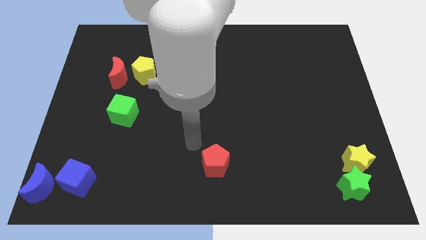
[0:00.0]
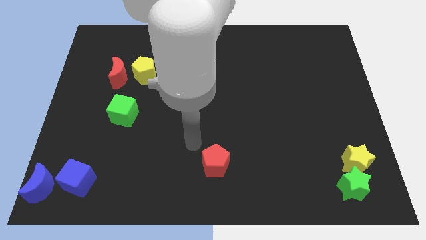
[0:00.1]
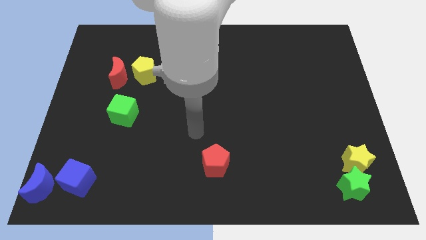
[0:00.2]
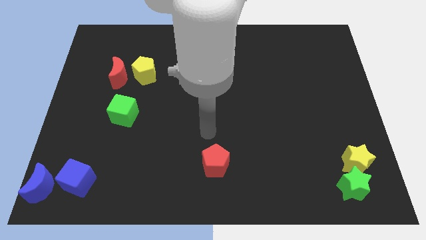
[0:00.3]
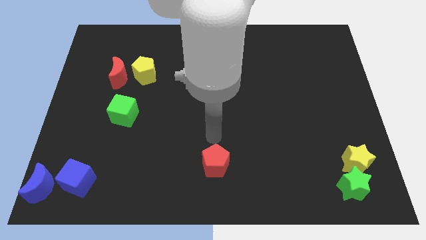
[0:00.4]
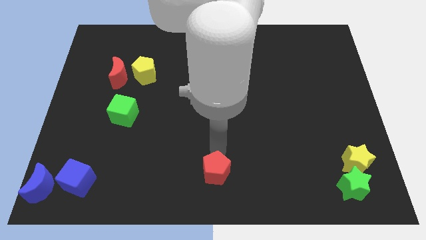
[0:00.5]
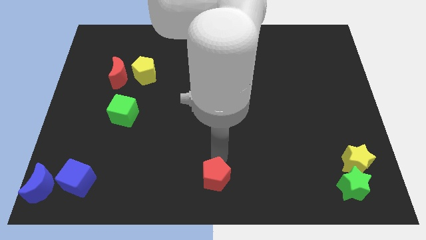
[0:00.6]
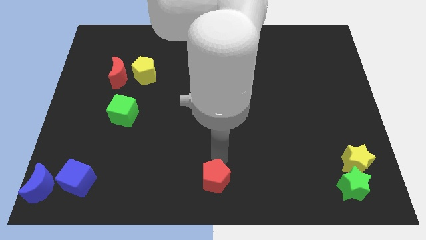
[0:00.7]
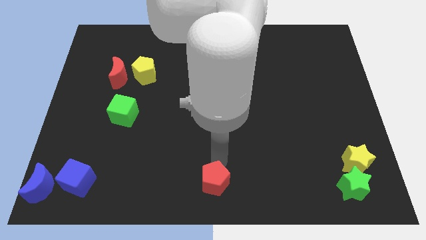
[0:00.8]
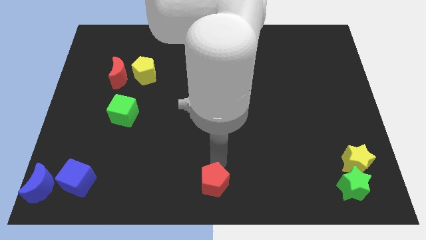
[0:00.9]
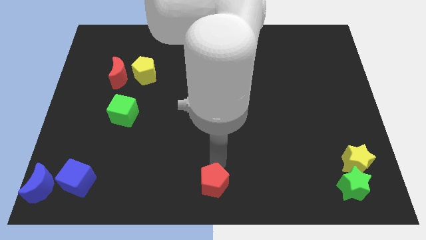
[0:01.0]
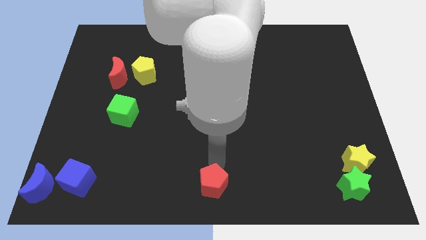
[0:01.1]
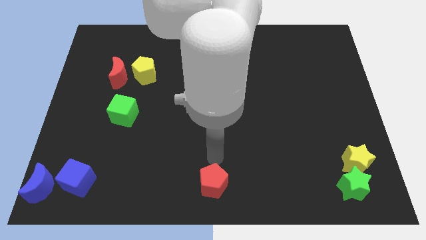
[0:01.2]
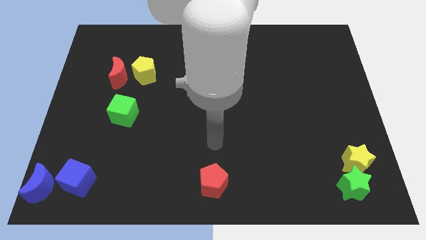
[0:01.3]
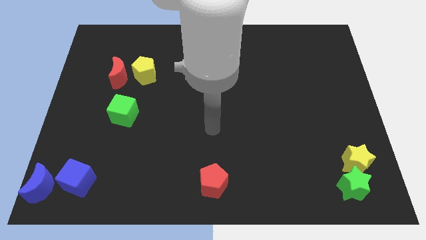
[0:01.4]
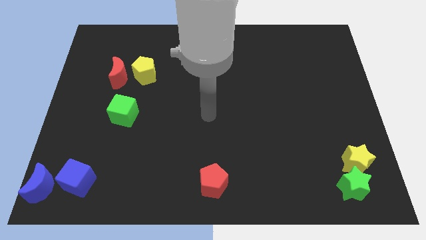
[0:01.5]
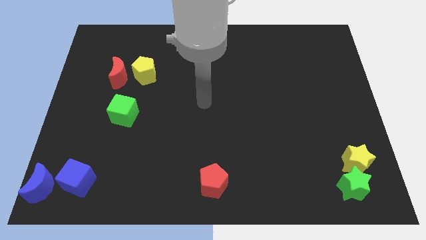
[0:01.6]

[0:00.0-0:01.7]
push the red pentagon to the bottom centre of the board

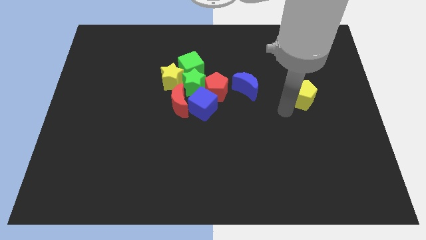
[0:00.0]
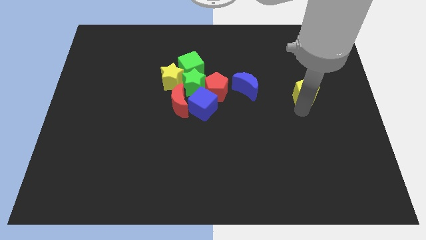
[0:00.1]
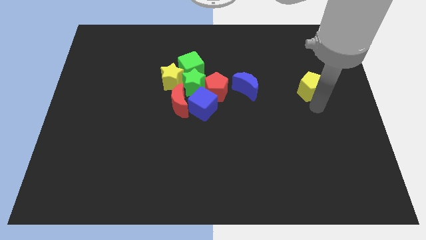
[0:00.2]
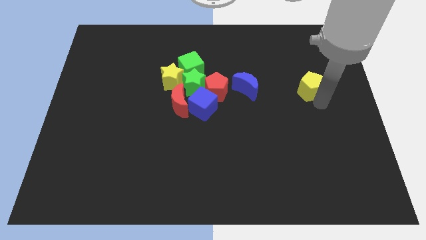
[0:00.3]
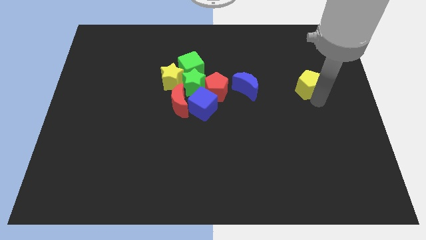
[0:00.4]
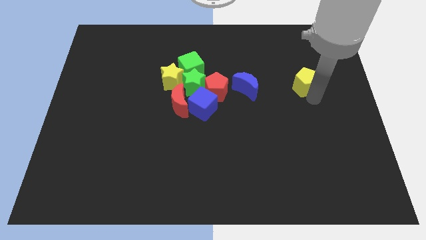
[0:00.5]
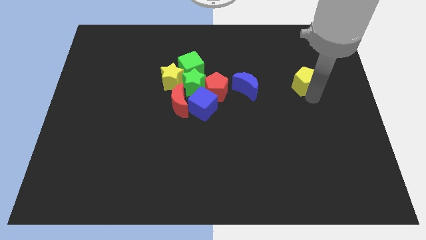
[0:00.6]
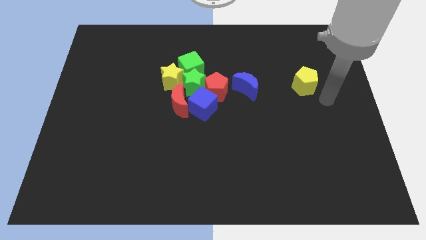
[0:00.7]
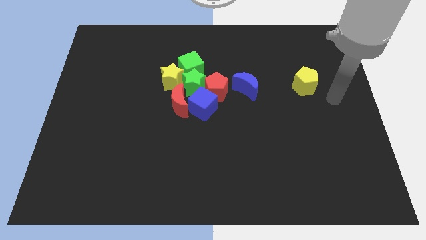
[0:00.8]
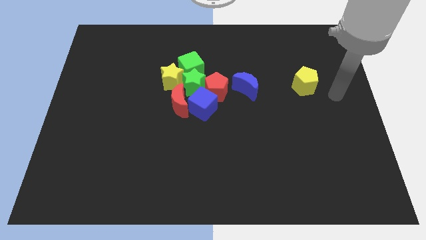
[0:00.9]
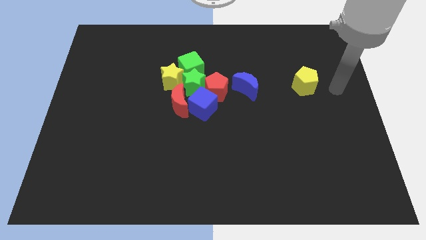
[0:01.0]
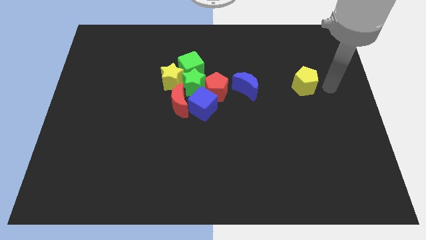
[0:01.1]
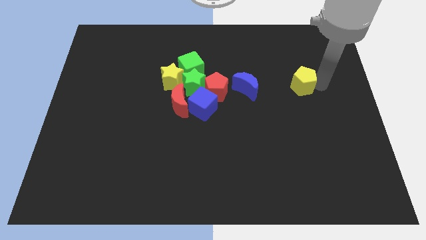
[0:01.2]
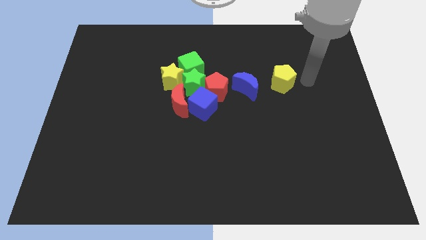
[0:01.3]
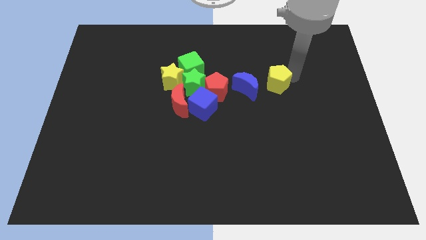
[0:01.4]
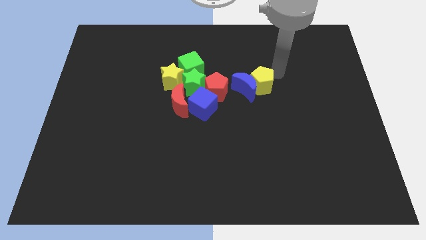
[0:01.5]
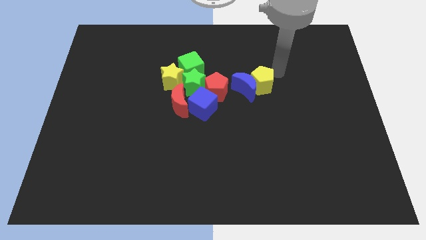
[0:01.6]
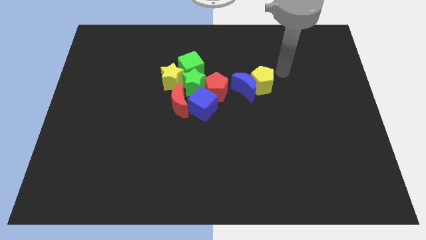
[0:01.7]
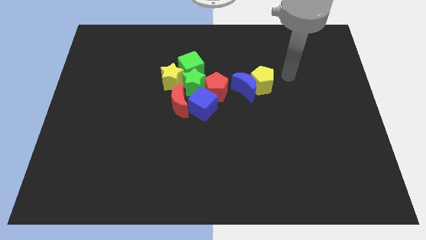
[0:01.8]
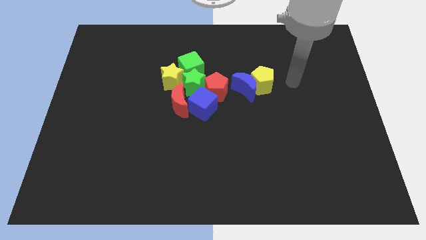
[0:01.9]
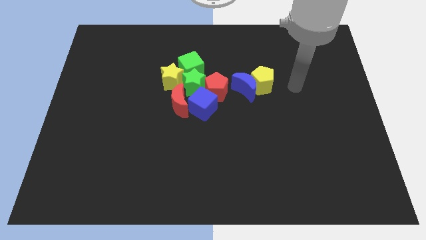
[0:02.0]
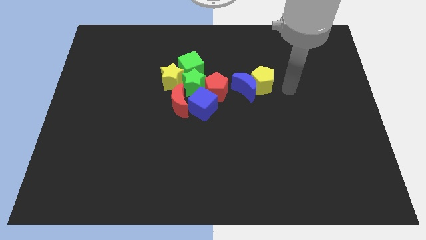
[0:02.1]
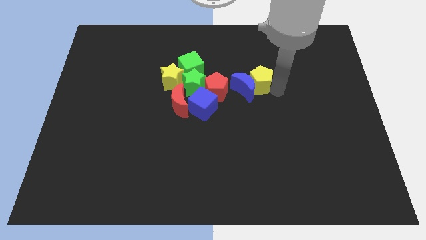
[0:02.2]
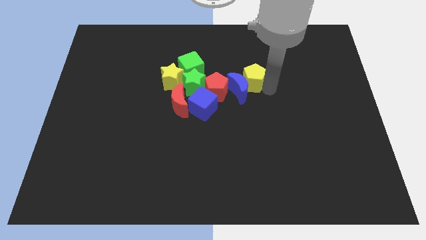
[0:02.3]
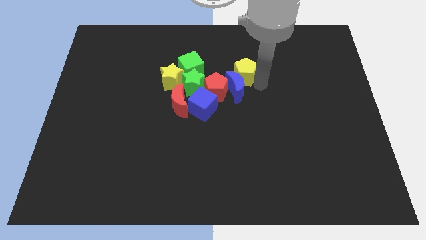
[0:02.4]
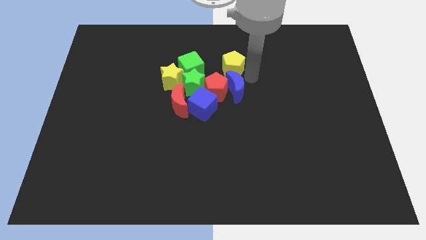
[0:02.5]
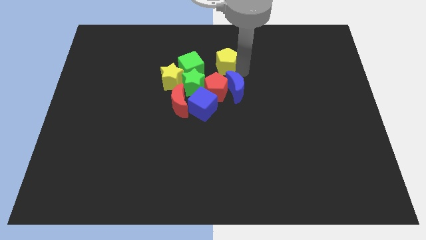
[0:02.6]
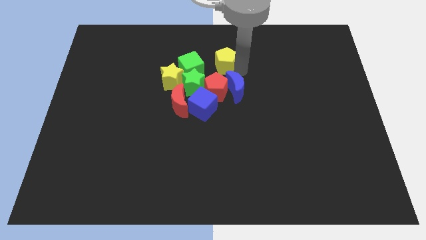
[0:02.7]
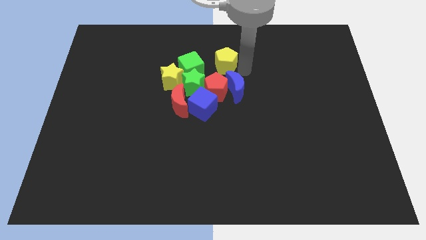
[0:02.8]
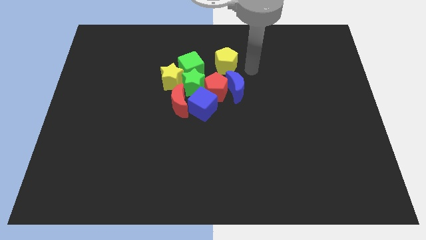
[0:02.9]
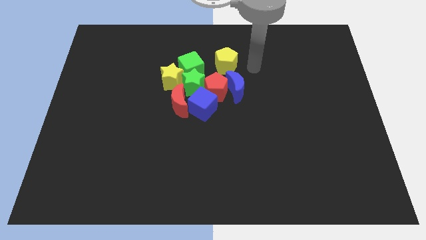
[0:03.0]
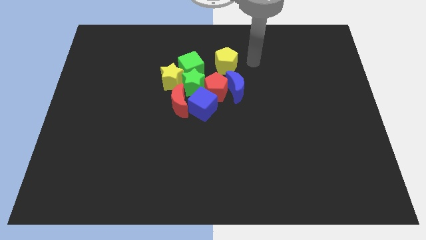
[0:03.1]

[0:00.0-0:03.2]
slide yellow pentagon to right of green cube

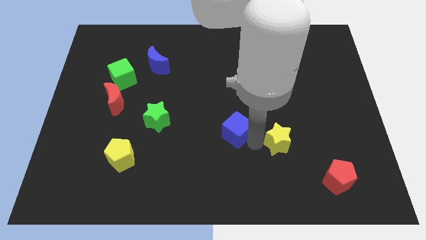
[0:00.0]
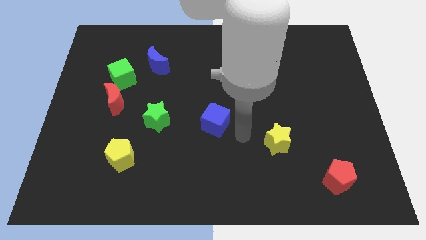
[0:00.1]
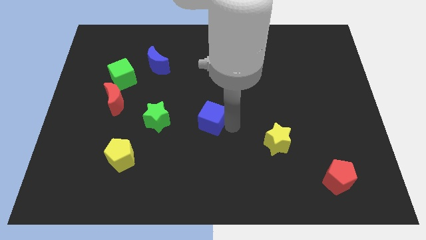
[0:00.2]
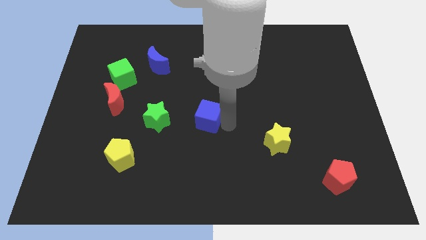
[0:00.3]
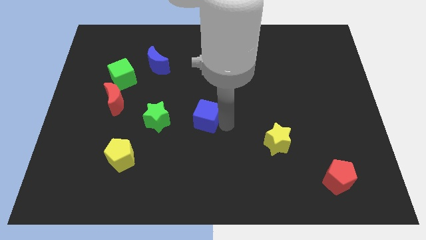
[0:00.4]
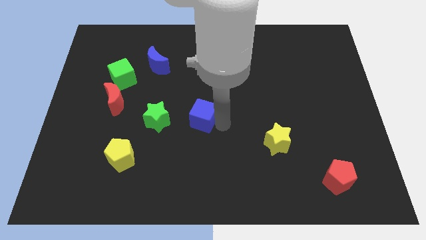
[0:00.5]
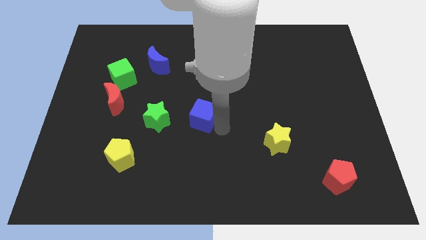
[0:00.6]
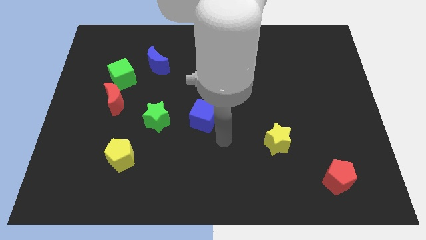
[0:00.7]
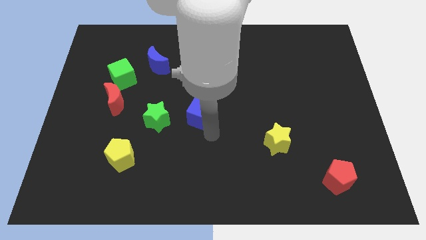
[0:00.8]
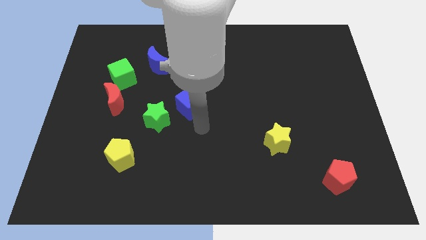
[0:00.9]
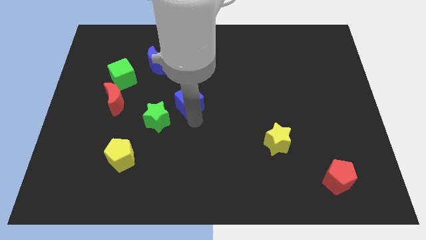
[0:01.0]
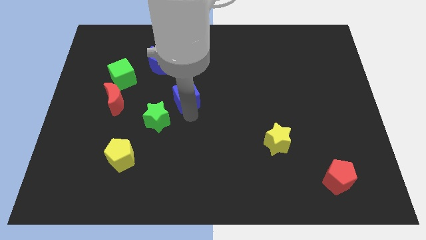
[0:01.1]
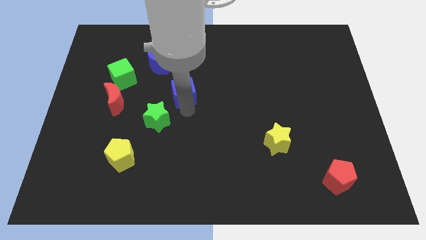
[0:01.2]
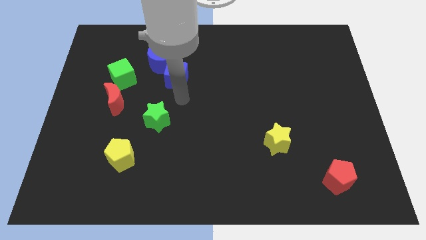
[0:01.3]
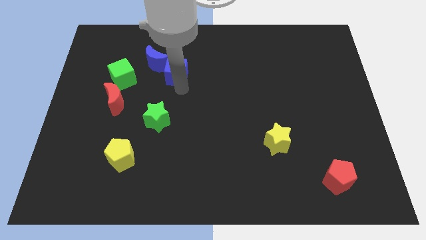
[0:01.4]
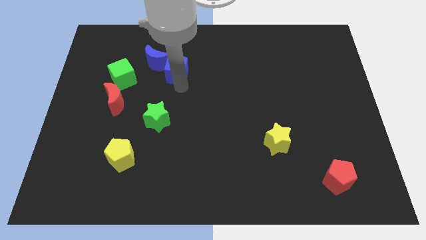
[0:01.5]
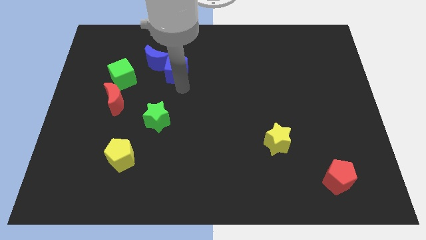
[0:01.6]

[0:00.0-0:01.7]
slide the blue cube into the blue moon

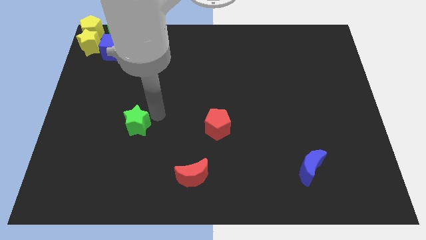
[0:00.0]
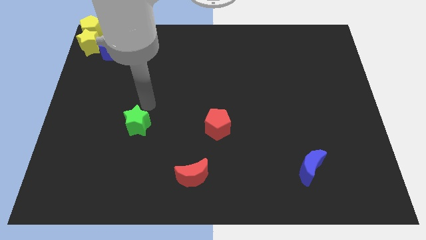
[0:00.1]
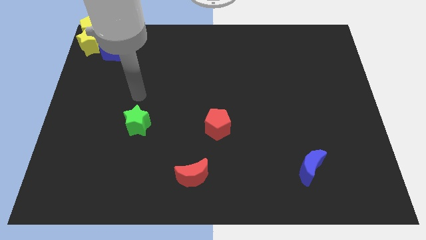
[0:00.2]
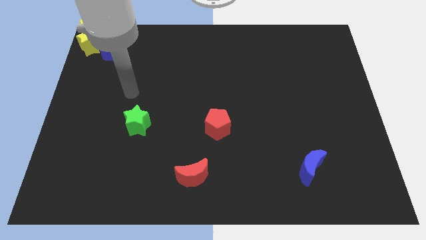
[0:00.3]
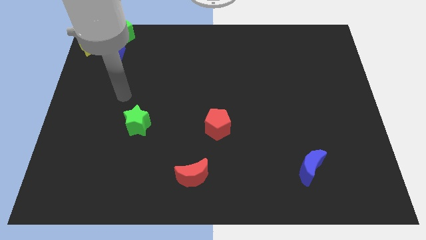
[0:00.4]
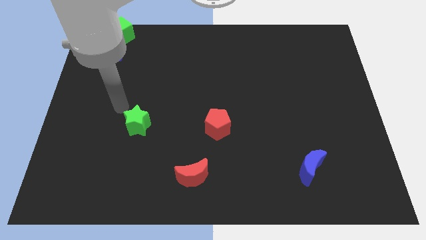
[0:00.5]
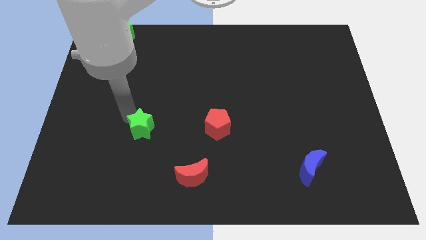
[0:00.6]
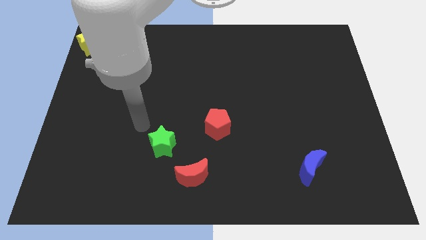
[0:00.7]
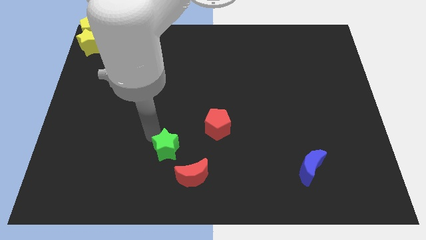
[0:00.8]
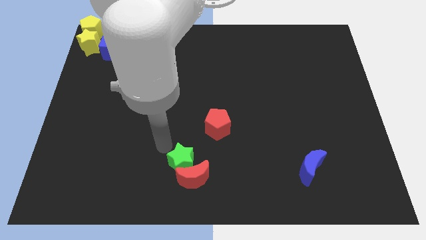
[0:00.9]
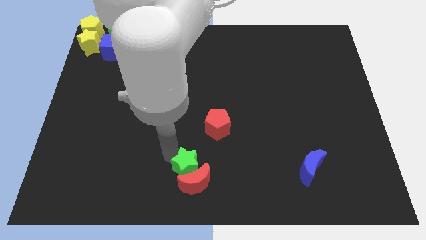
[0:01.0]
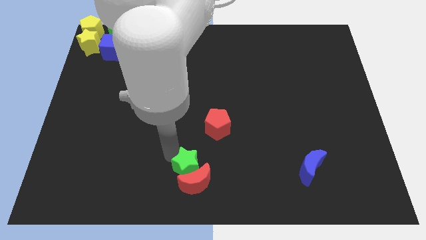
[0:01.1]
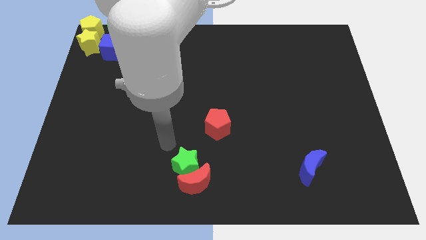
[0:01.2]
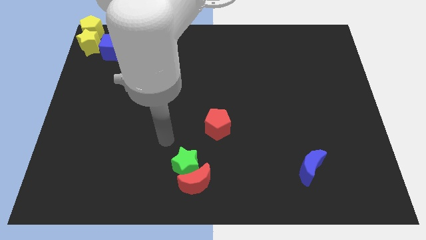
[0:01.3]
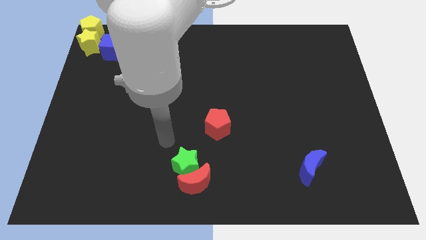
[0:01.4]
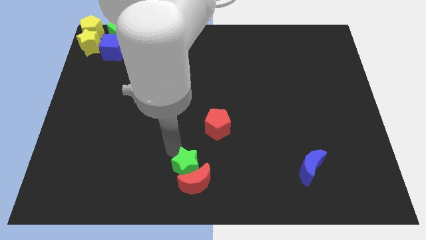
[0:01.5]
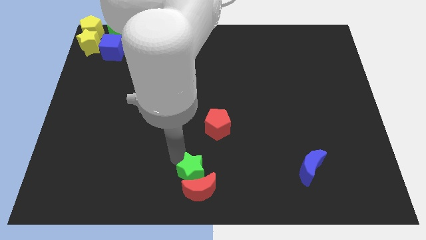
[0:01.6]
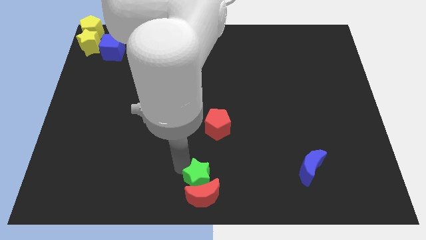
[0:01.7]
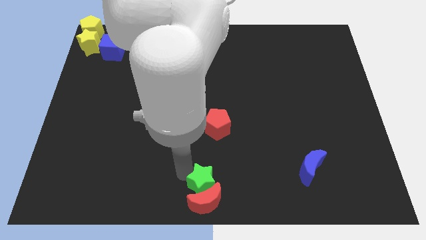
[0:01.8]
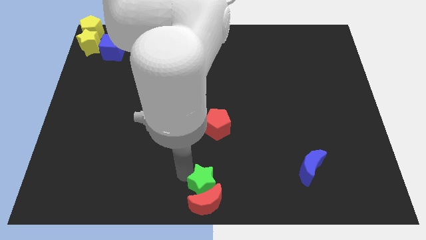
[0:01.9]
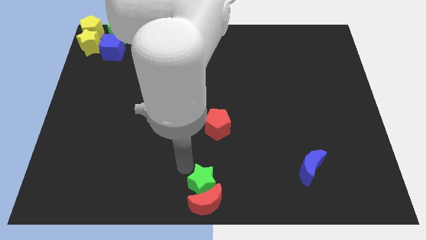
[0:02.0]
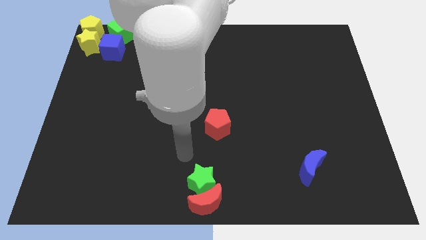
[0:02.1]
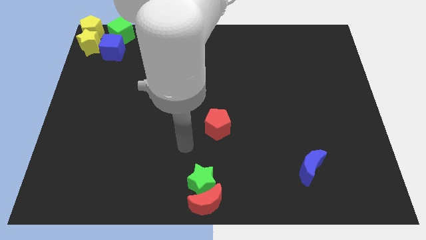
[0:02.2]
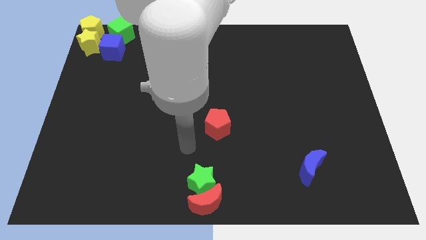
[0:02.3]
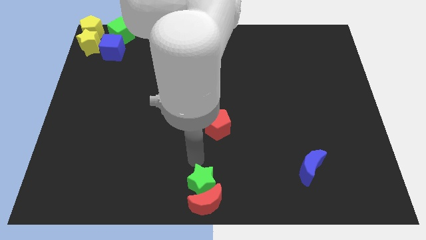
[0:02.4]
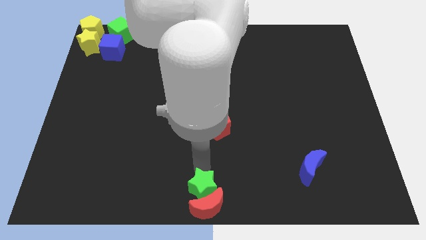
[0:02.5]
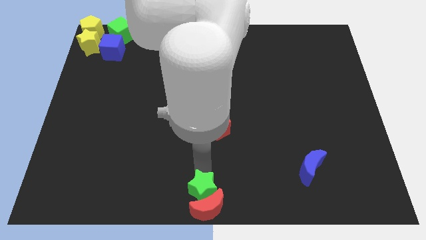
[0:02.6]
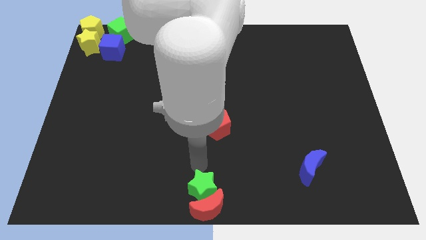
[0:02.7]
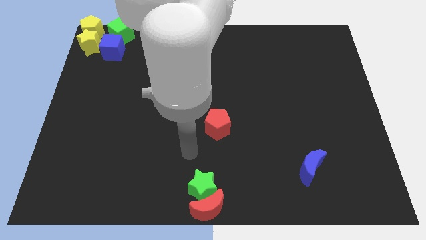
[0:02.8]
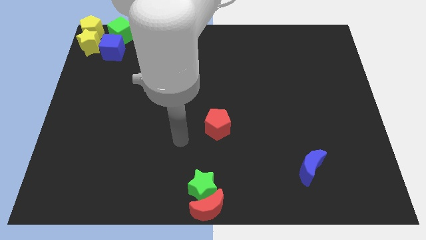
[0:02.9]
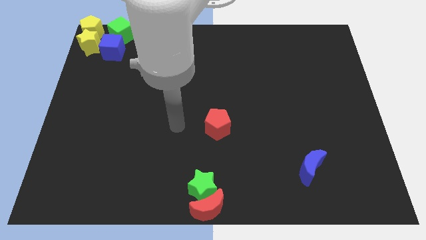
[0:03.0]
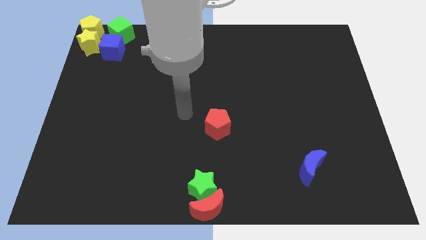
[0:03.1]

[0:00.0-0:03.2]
push the green star and red crescent towards the bottom centre of the board
